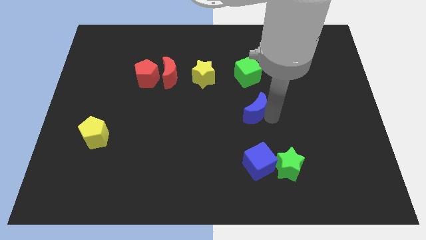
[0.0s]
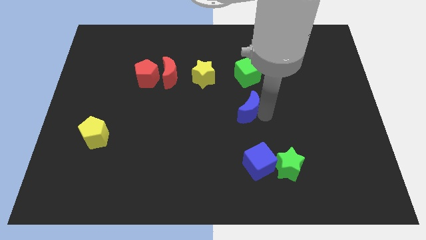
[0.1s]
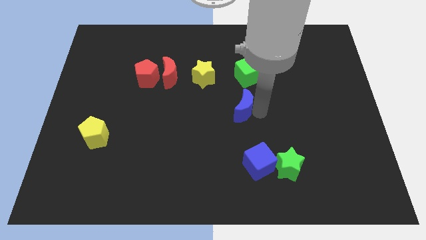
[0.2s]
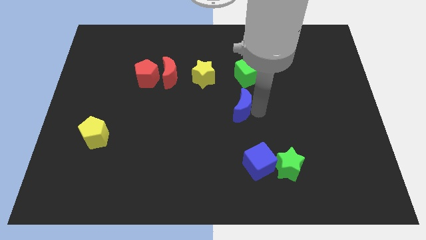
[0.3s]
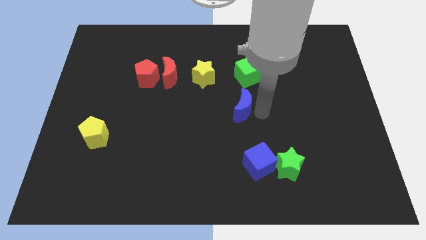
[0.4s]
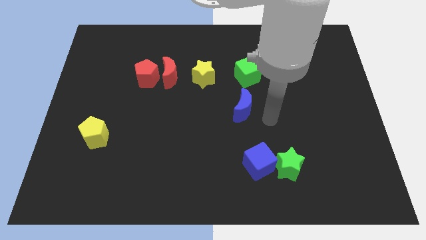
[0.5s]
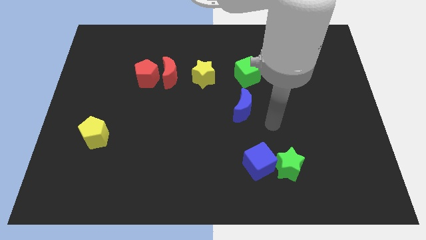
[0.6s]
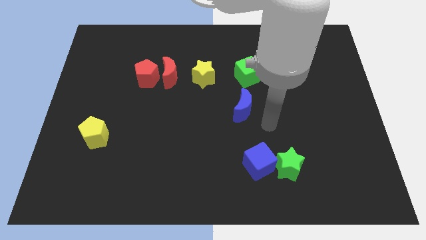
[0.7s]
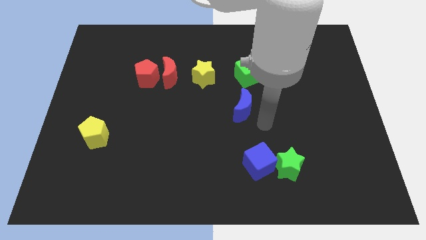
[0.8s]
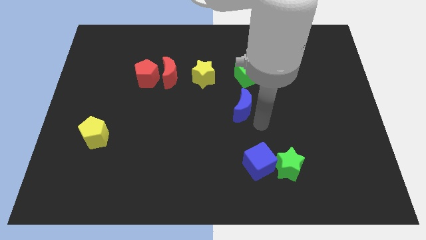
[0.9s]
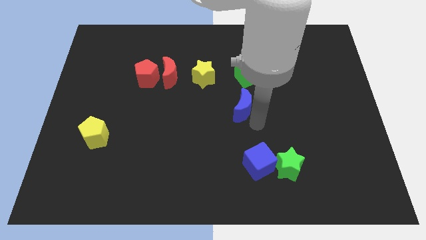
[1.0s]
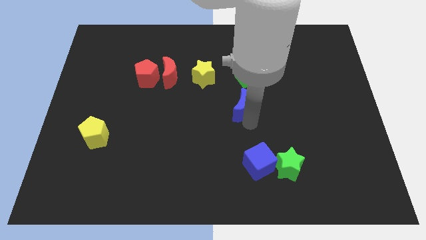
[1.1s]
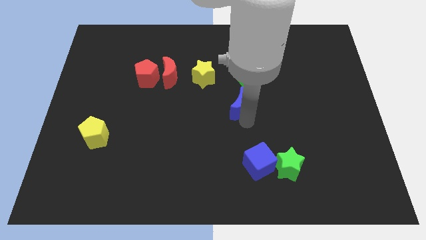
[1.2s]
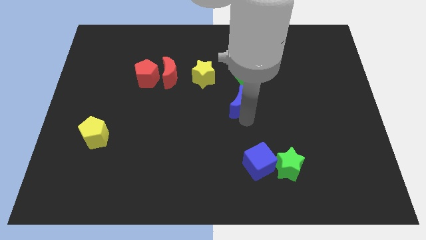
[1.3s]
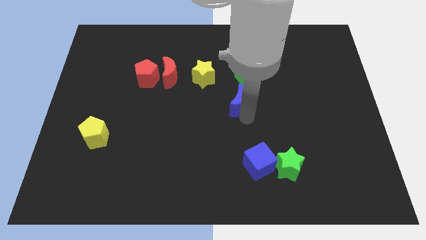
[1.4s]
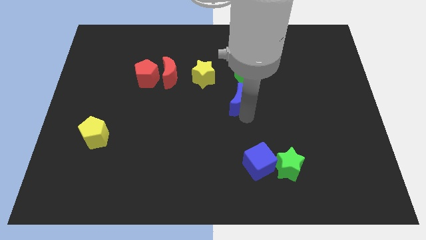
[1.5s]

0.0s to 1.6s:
place the blue crescent close to the green cube

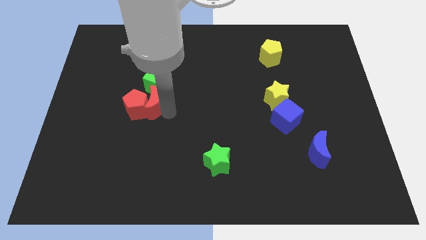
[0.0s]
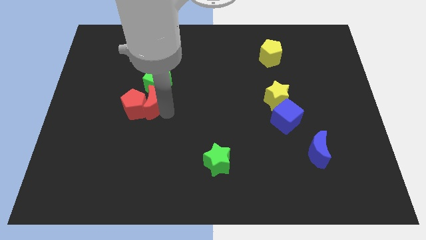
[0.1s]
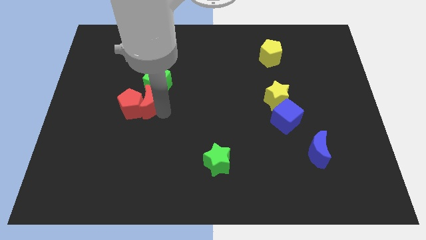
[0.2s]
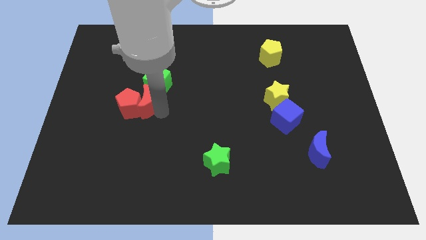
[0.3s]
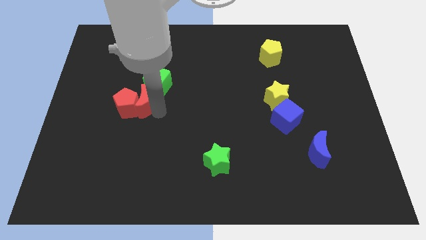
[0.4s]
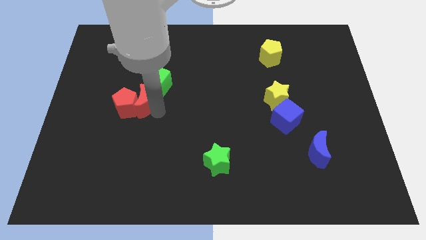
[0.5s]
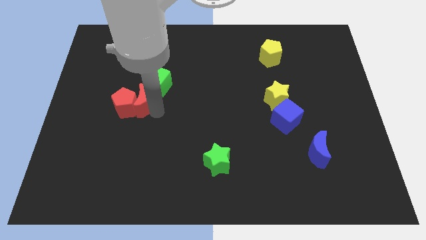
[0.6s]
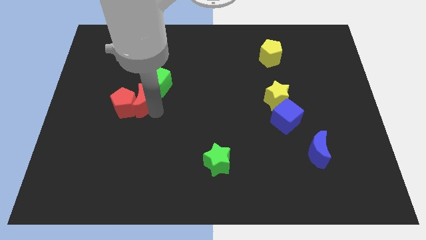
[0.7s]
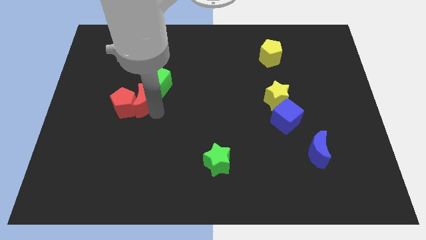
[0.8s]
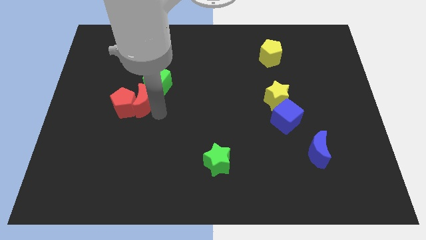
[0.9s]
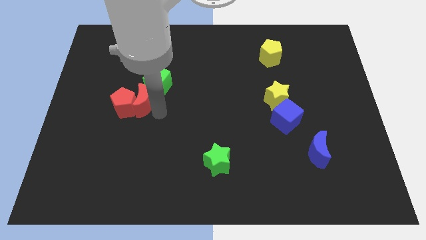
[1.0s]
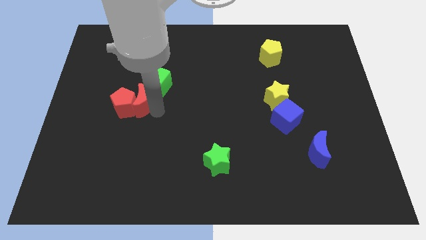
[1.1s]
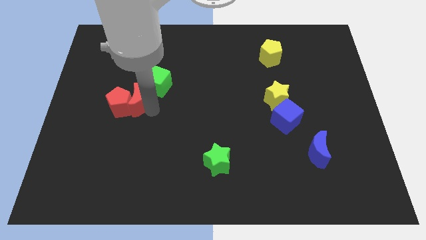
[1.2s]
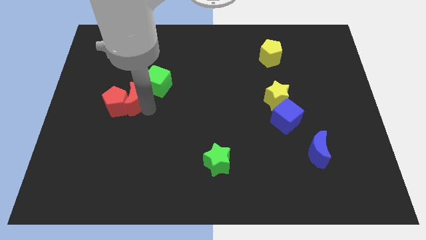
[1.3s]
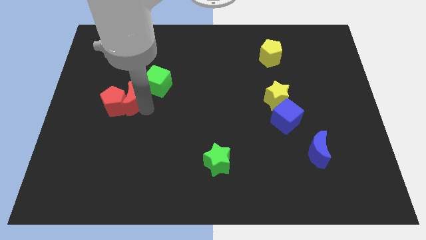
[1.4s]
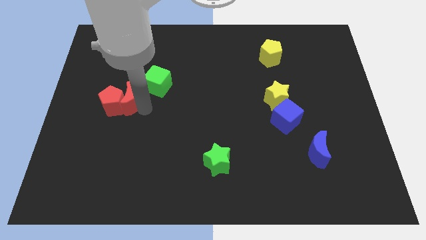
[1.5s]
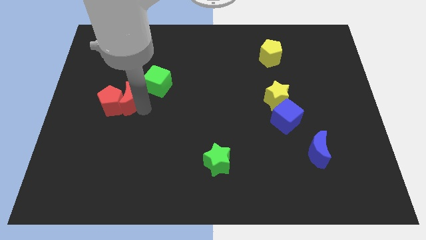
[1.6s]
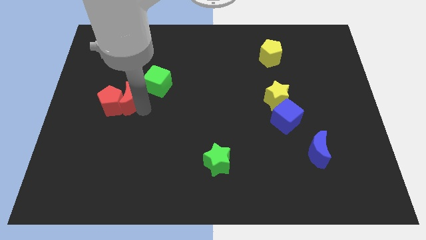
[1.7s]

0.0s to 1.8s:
slide the red blocks to the left side of the board

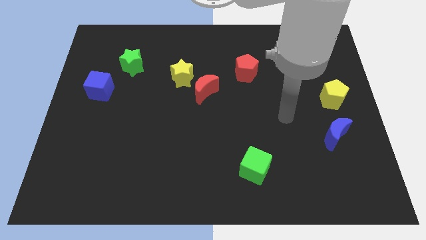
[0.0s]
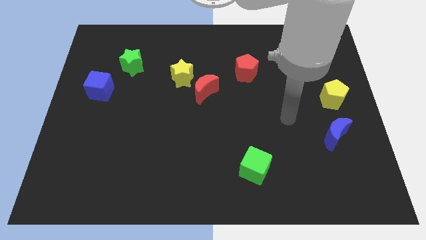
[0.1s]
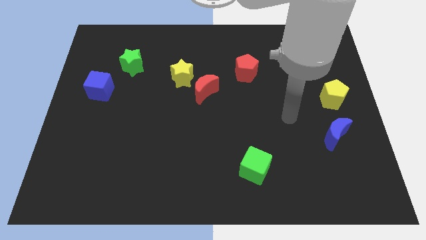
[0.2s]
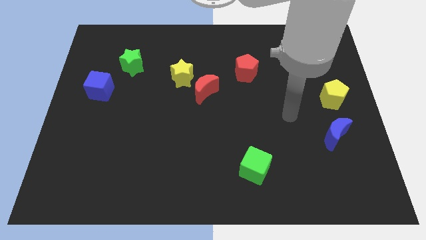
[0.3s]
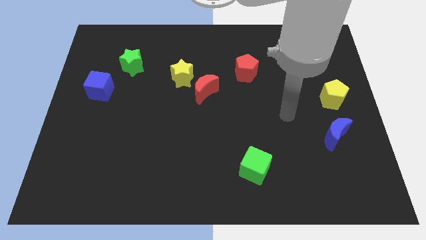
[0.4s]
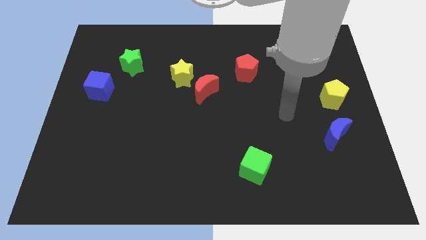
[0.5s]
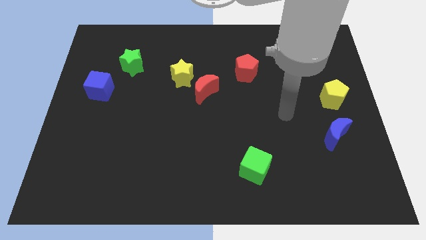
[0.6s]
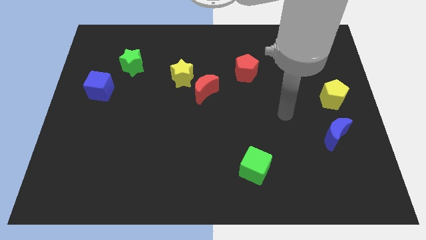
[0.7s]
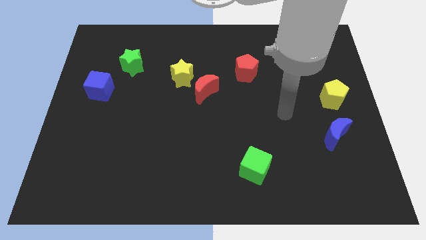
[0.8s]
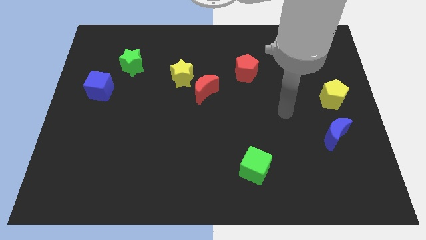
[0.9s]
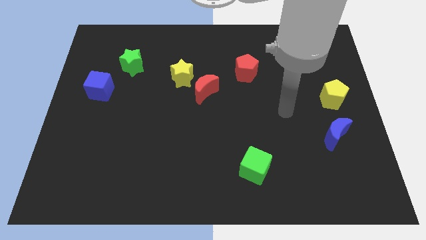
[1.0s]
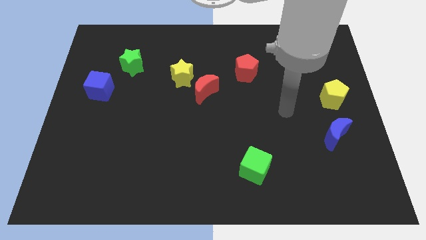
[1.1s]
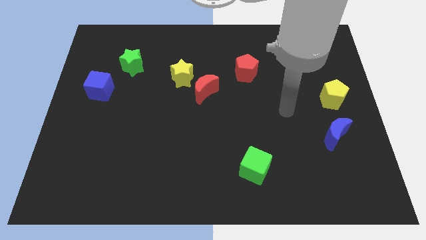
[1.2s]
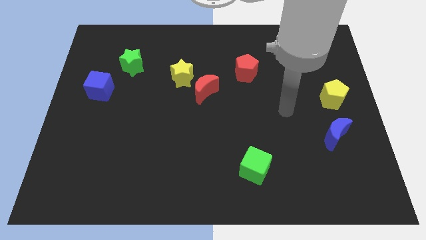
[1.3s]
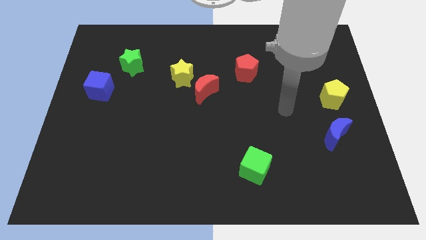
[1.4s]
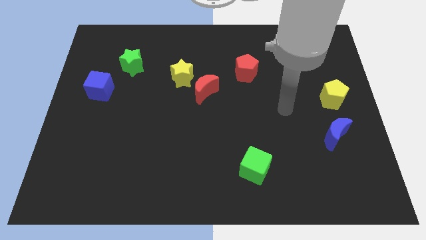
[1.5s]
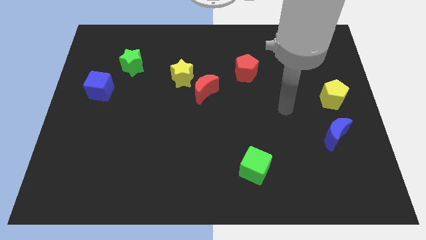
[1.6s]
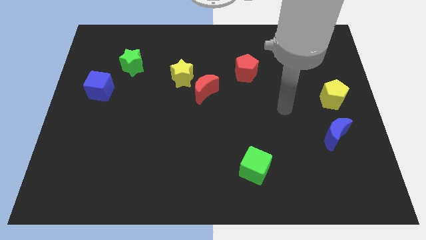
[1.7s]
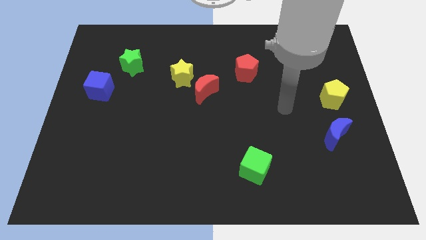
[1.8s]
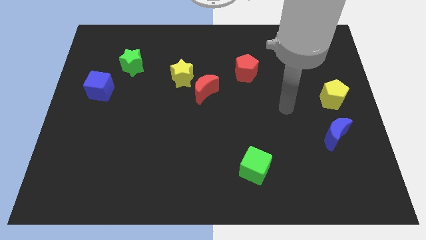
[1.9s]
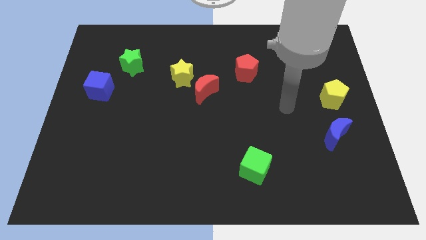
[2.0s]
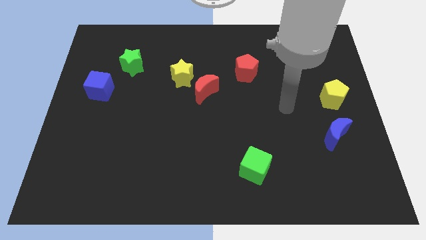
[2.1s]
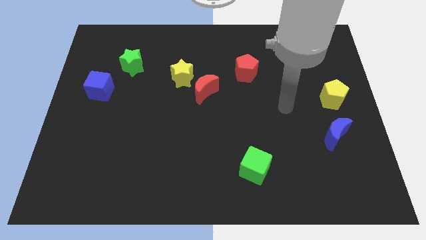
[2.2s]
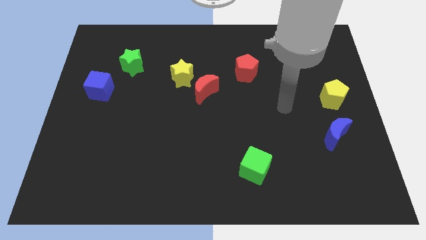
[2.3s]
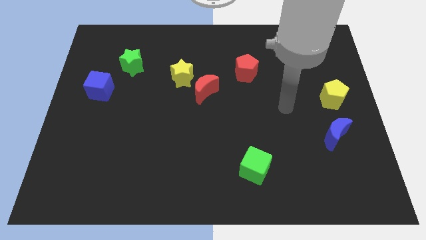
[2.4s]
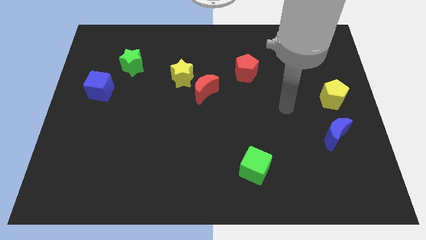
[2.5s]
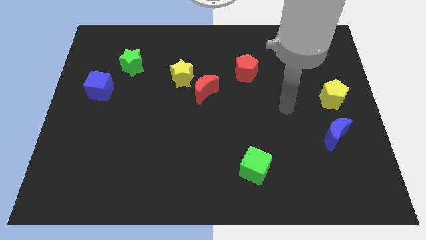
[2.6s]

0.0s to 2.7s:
move your arm slightly up

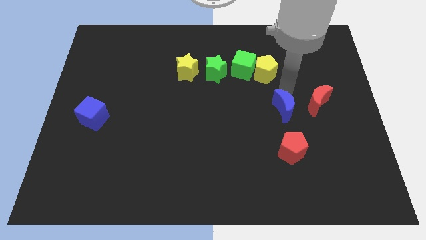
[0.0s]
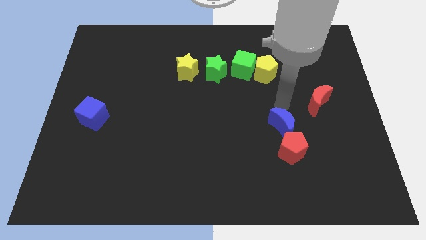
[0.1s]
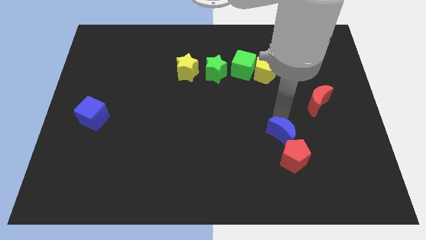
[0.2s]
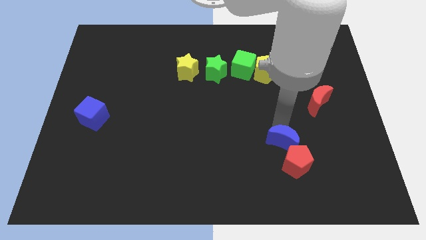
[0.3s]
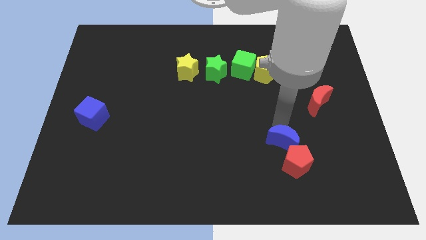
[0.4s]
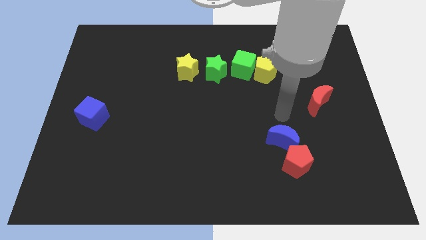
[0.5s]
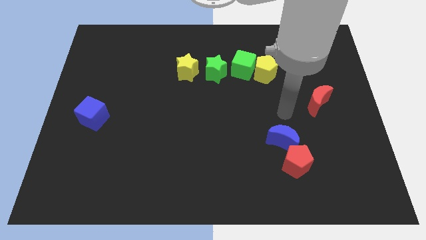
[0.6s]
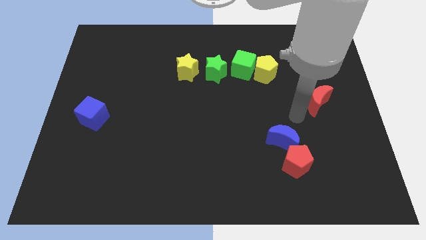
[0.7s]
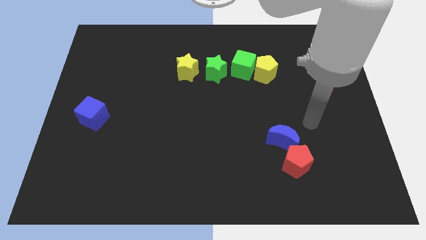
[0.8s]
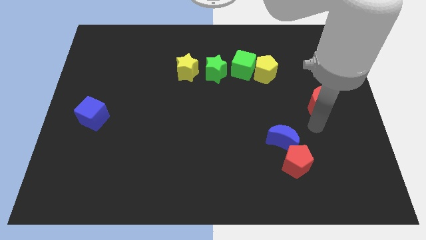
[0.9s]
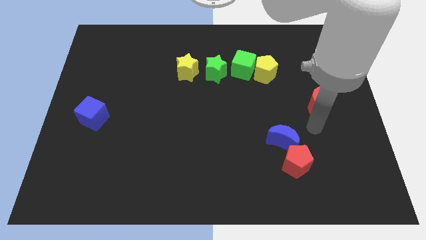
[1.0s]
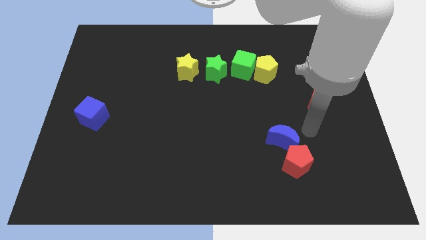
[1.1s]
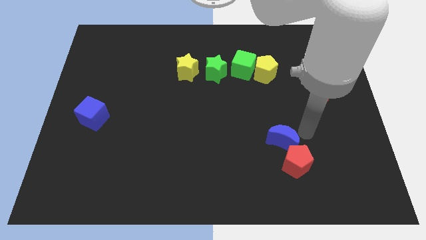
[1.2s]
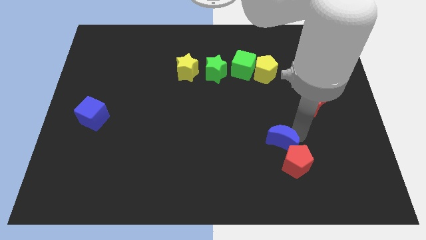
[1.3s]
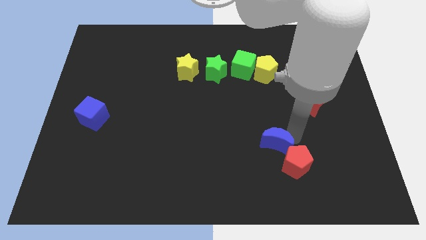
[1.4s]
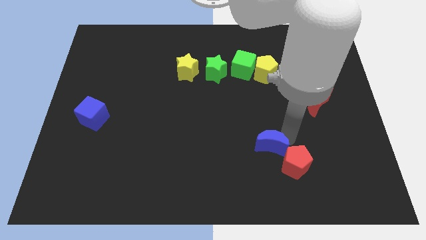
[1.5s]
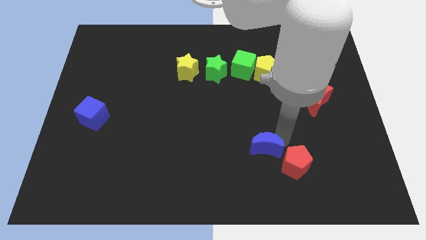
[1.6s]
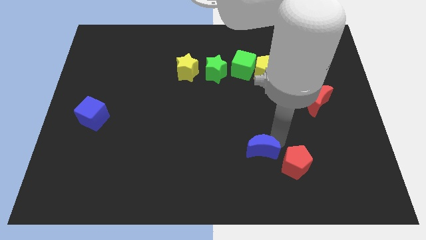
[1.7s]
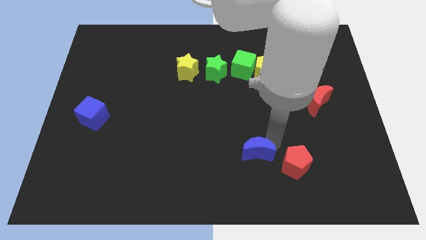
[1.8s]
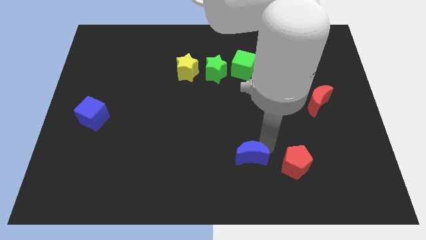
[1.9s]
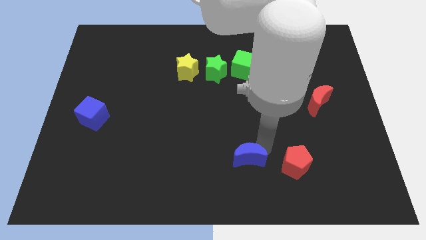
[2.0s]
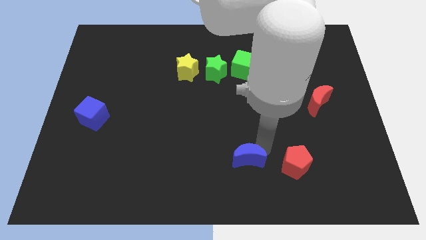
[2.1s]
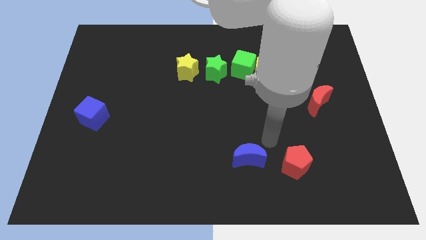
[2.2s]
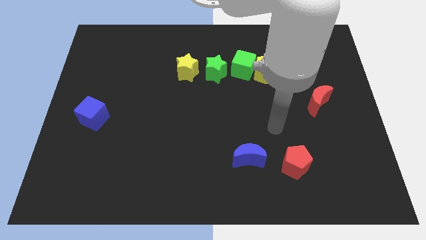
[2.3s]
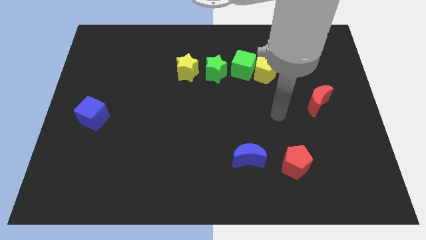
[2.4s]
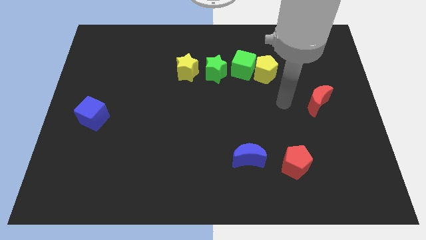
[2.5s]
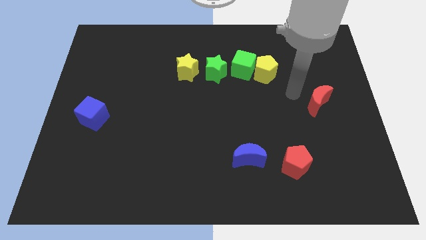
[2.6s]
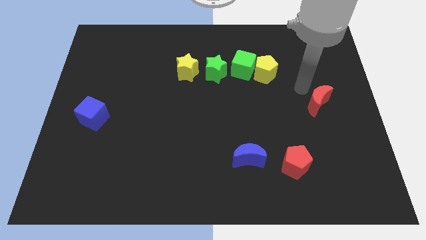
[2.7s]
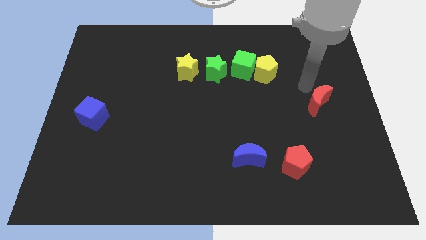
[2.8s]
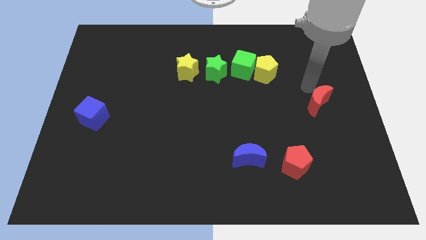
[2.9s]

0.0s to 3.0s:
put the blue crescent to the left of the red pentagon
